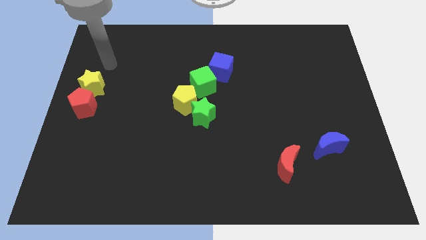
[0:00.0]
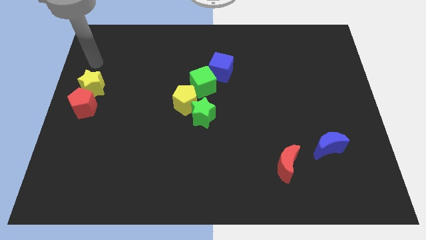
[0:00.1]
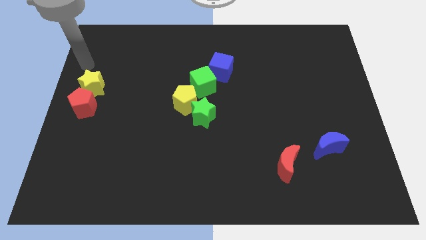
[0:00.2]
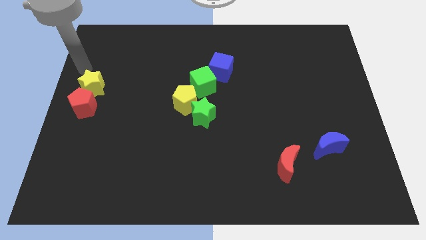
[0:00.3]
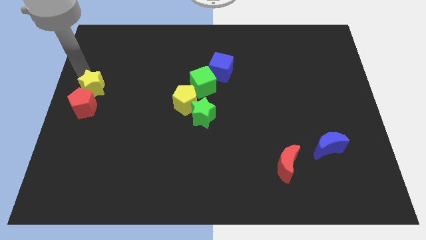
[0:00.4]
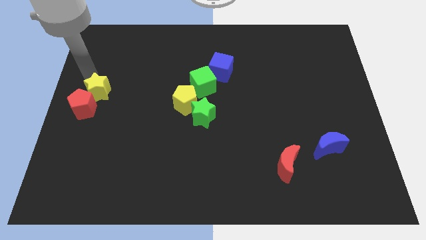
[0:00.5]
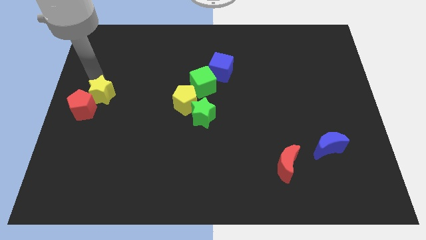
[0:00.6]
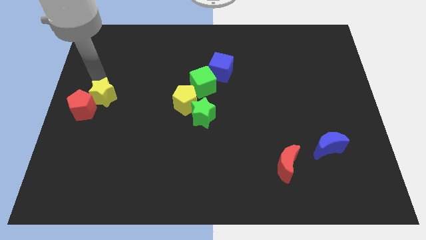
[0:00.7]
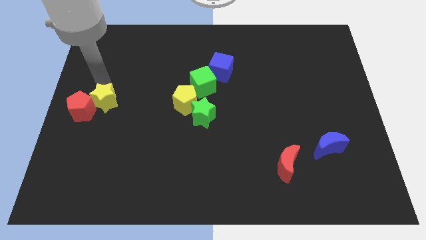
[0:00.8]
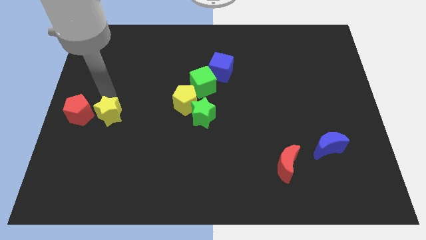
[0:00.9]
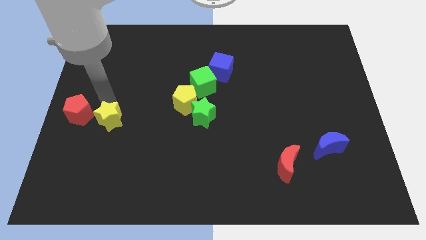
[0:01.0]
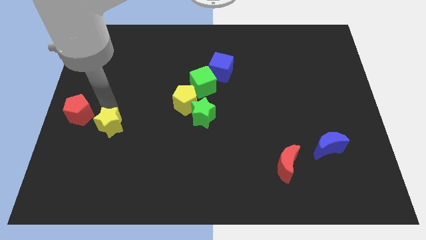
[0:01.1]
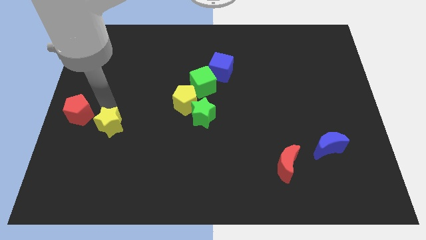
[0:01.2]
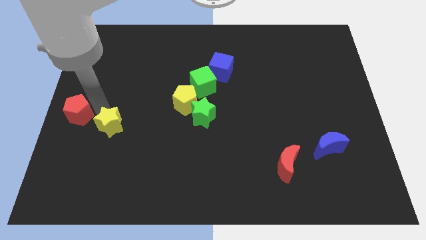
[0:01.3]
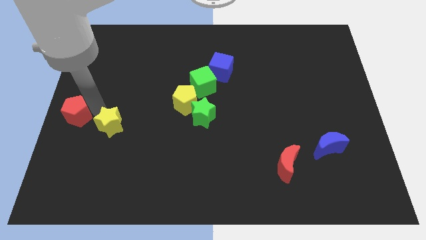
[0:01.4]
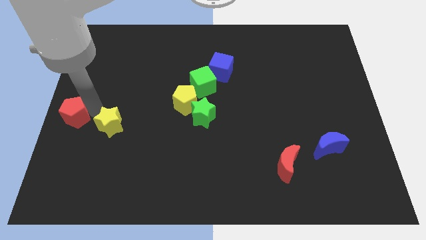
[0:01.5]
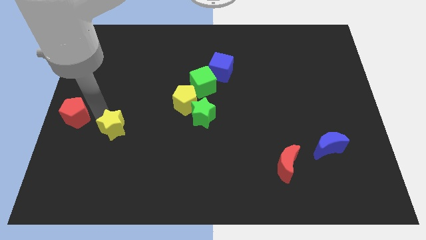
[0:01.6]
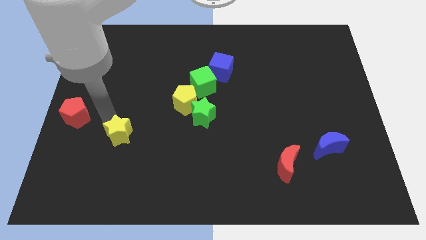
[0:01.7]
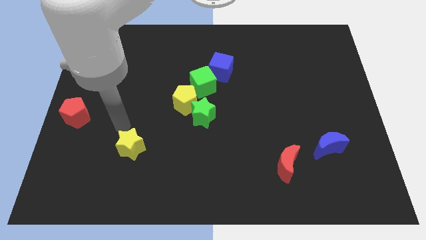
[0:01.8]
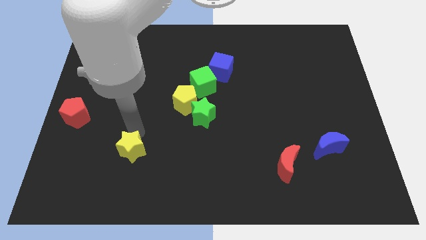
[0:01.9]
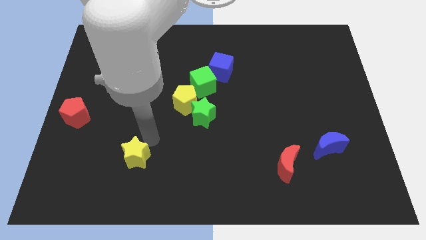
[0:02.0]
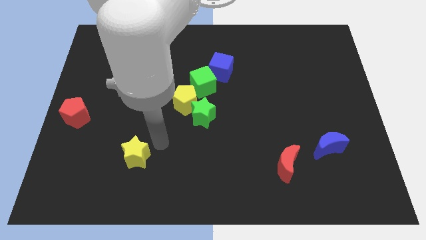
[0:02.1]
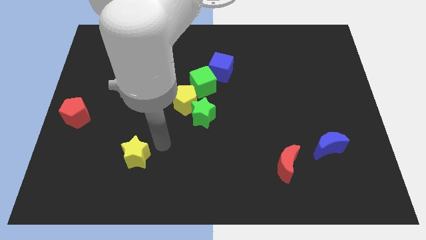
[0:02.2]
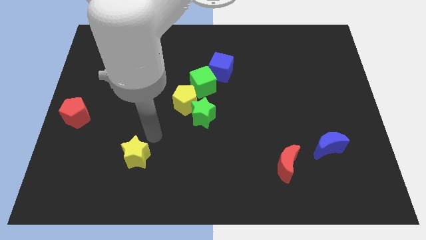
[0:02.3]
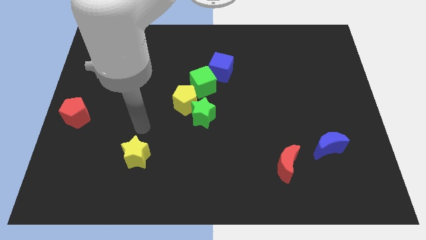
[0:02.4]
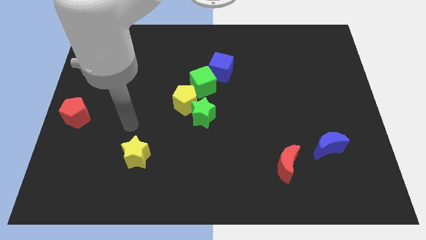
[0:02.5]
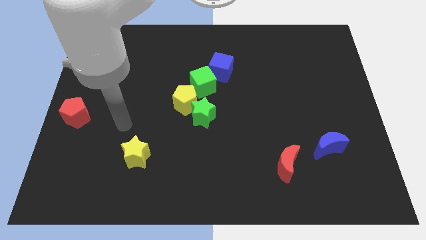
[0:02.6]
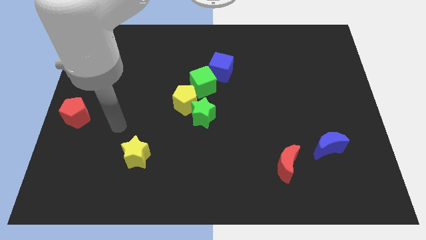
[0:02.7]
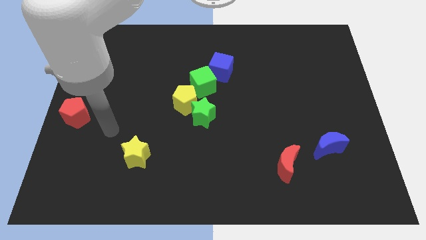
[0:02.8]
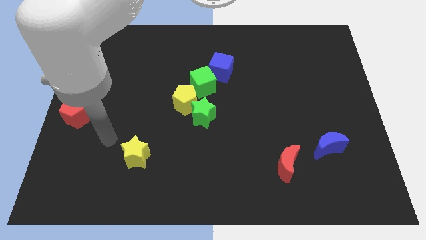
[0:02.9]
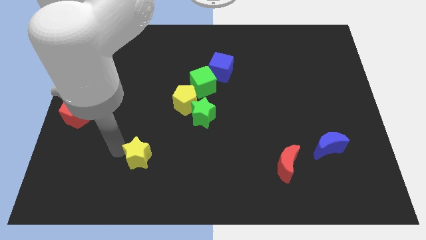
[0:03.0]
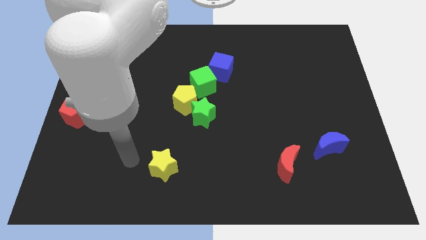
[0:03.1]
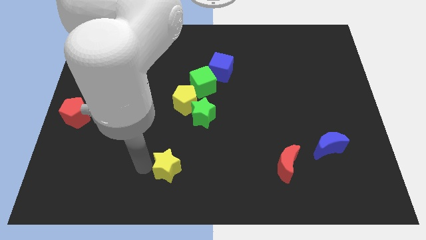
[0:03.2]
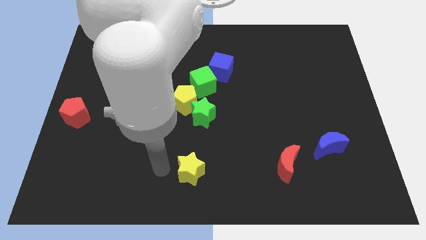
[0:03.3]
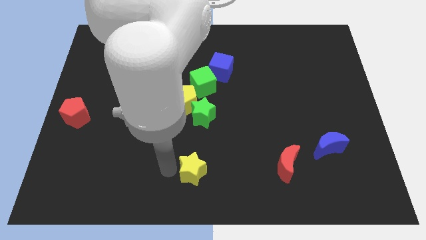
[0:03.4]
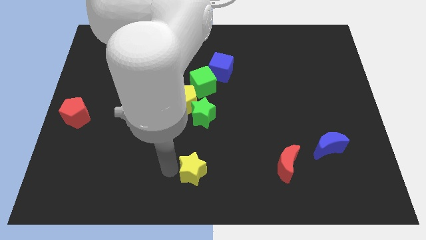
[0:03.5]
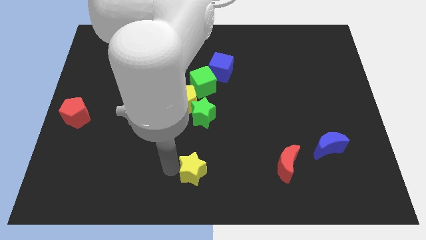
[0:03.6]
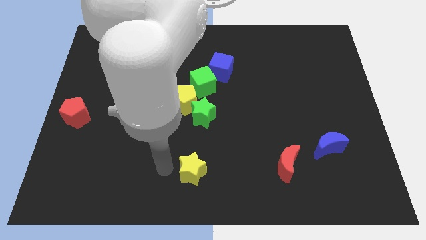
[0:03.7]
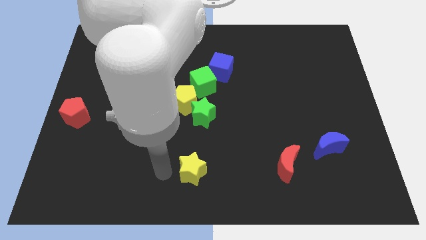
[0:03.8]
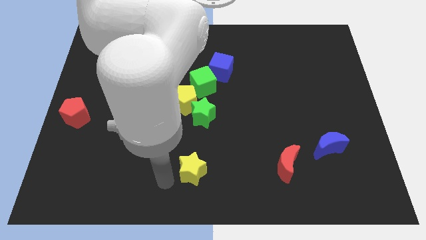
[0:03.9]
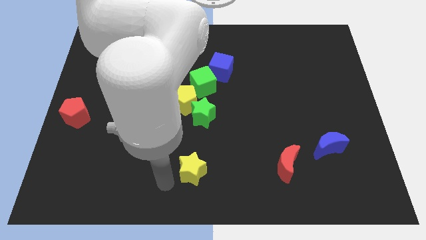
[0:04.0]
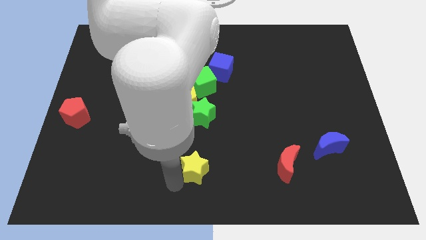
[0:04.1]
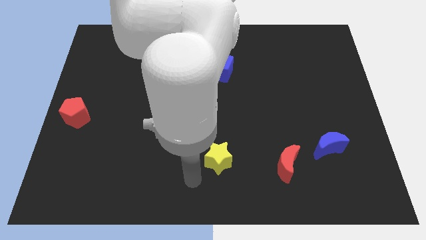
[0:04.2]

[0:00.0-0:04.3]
separate yellow star from red pentagon

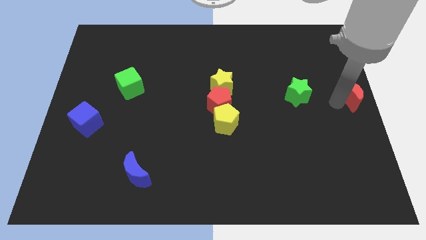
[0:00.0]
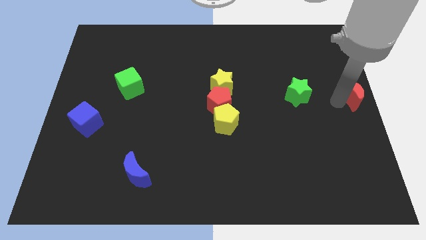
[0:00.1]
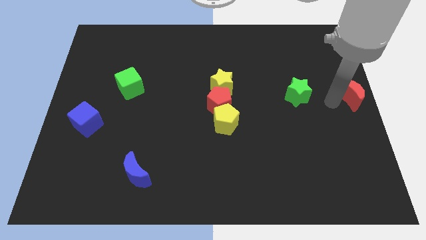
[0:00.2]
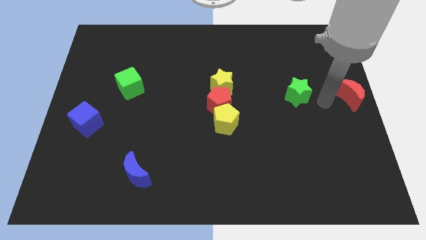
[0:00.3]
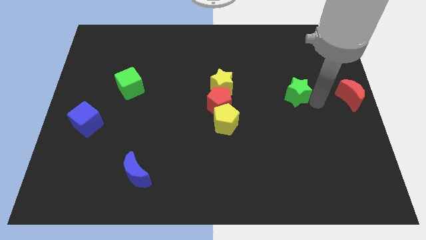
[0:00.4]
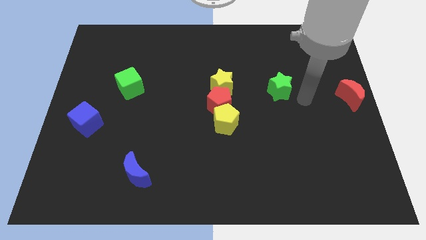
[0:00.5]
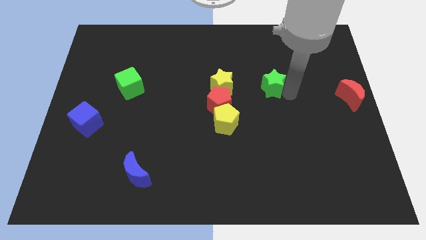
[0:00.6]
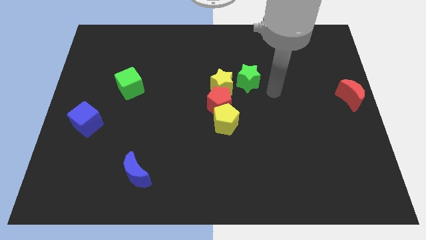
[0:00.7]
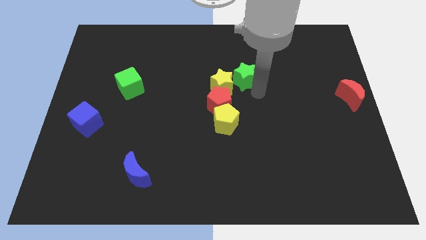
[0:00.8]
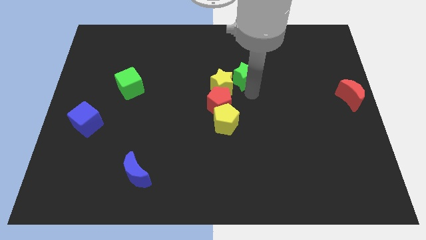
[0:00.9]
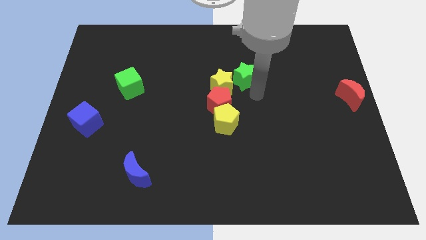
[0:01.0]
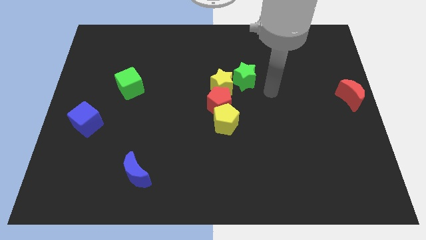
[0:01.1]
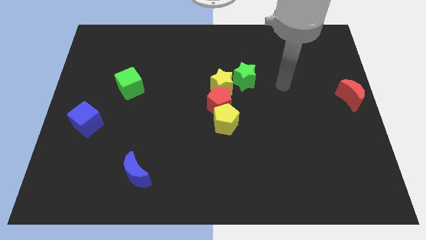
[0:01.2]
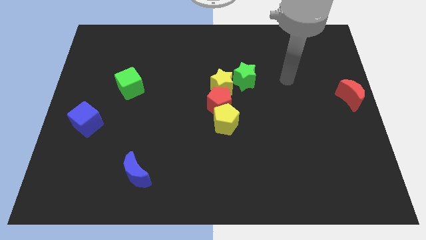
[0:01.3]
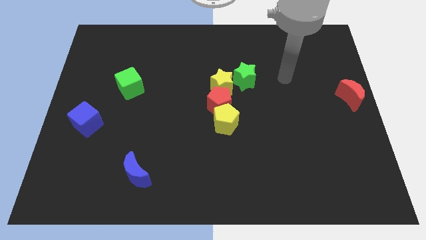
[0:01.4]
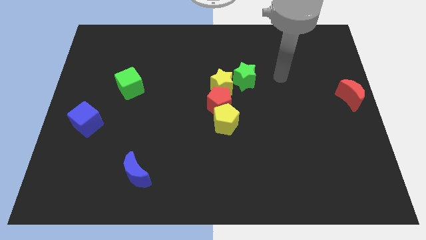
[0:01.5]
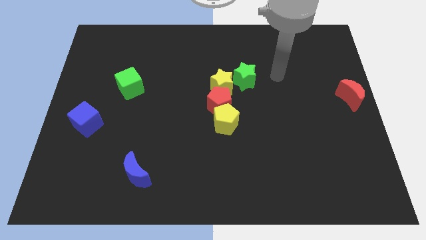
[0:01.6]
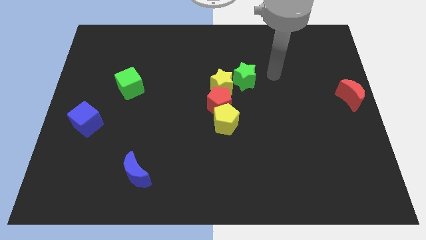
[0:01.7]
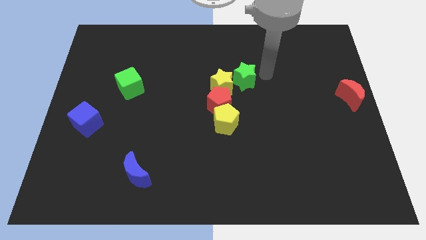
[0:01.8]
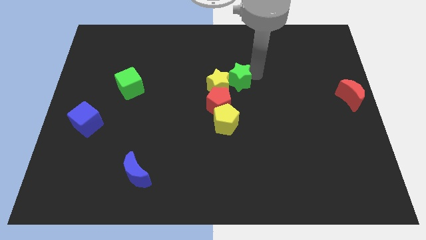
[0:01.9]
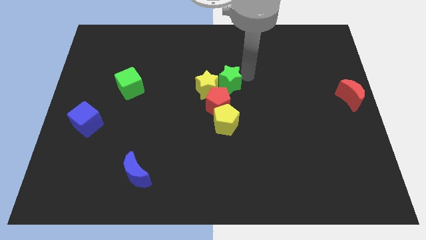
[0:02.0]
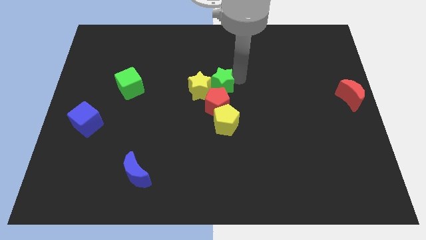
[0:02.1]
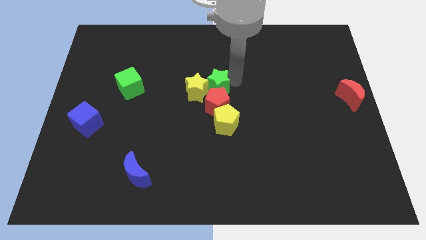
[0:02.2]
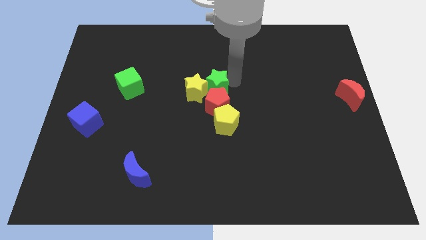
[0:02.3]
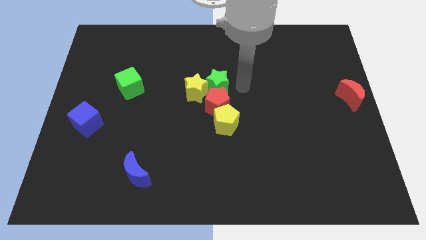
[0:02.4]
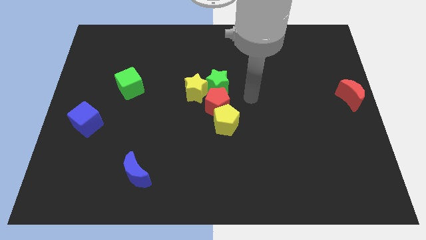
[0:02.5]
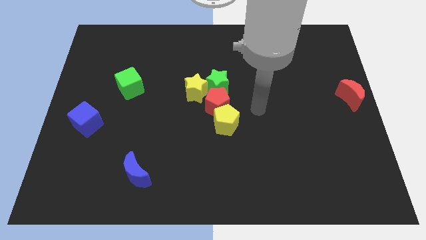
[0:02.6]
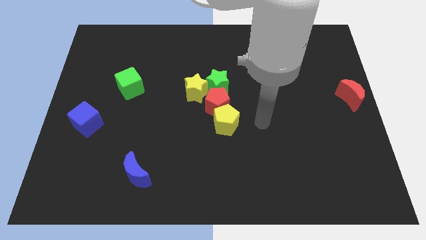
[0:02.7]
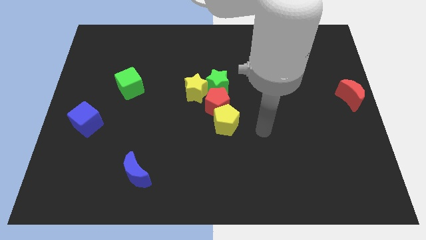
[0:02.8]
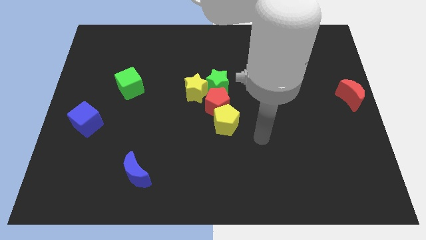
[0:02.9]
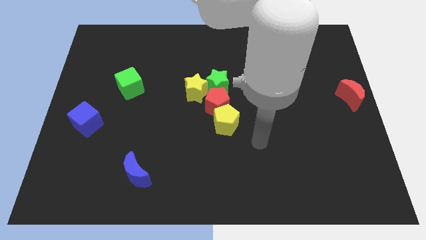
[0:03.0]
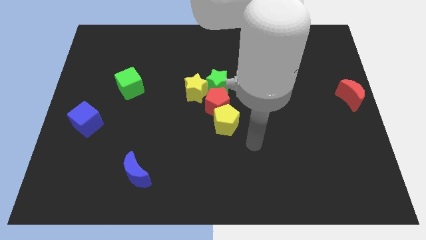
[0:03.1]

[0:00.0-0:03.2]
push the green star to the top side of the red pentagon

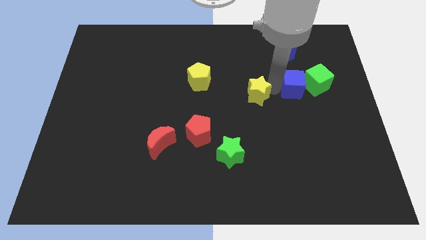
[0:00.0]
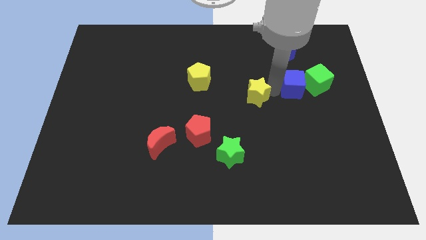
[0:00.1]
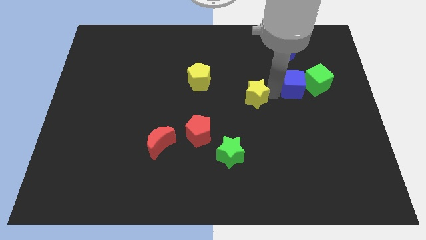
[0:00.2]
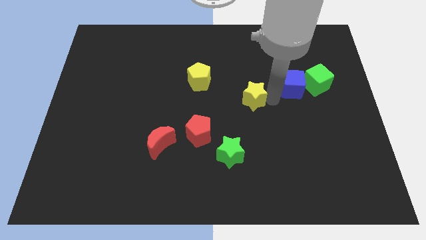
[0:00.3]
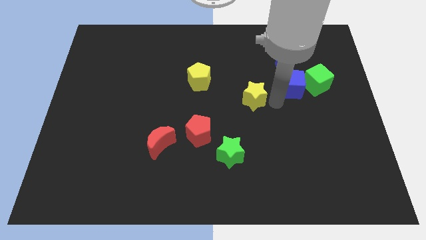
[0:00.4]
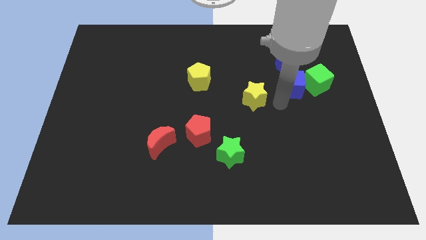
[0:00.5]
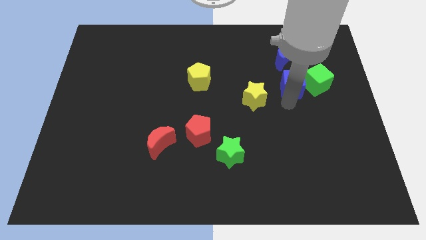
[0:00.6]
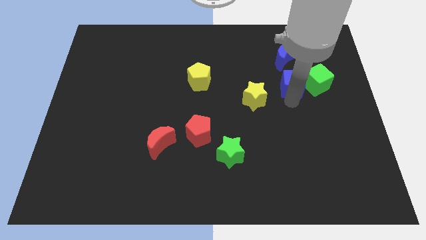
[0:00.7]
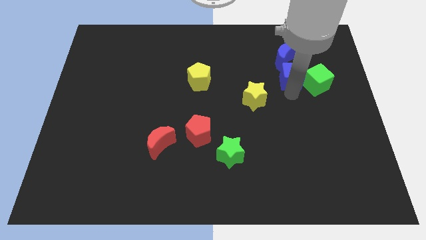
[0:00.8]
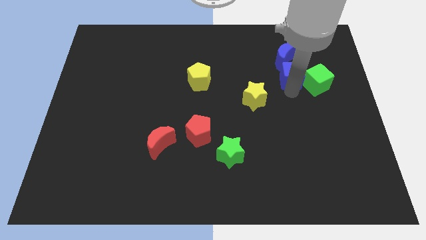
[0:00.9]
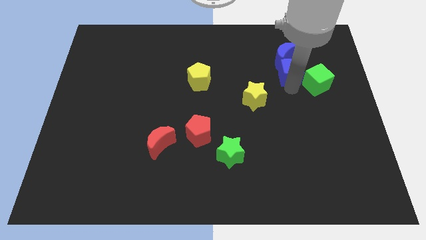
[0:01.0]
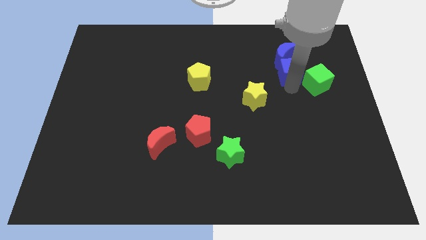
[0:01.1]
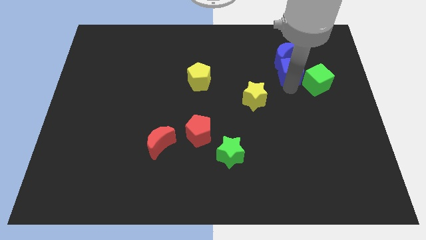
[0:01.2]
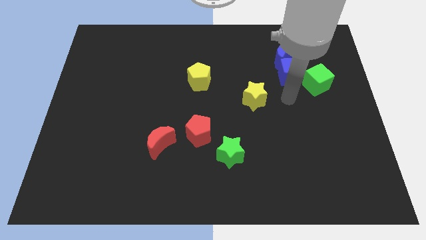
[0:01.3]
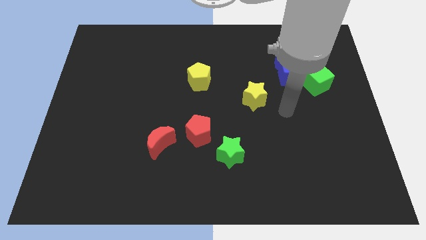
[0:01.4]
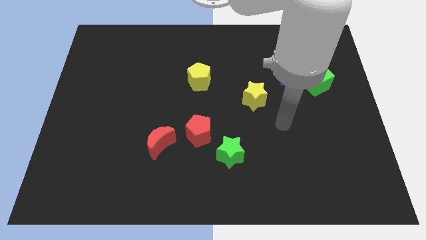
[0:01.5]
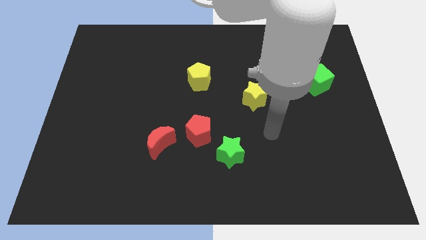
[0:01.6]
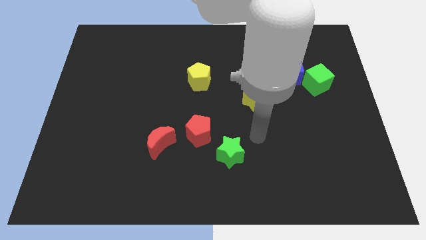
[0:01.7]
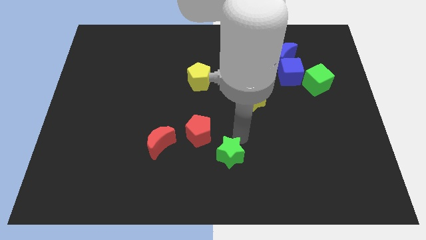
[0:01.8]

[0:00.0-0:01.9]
slightly push the blue cube towards the blue crescent
